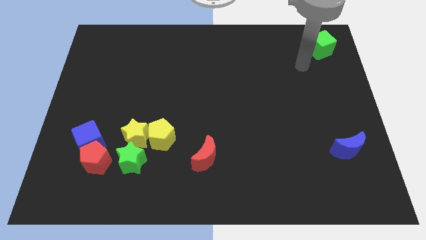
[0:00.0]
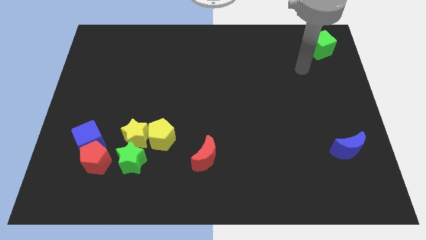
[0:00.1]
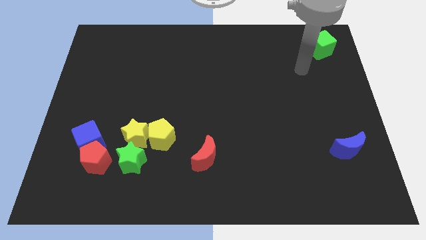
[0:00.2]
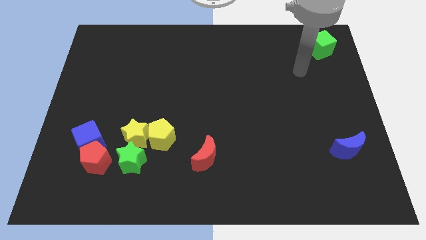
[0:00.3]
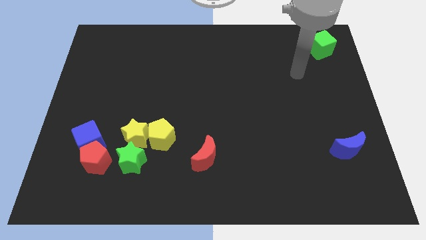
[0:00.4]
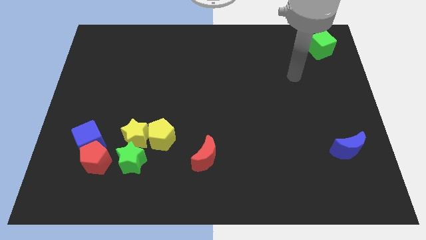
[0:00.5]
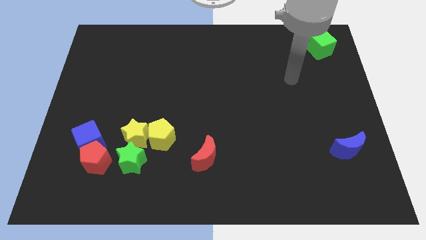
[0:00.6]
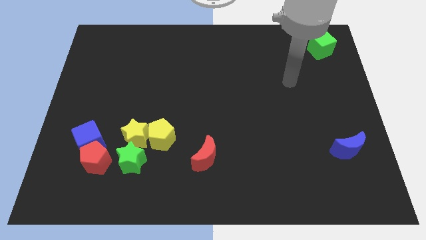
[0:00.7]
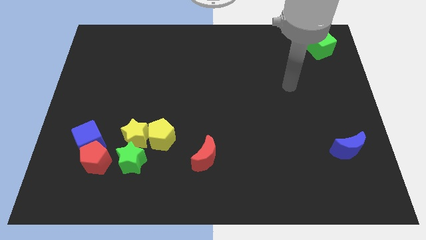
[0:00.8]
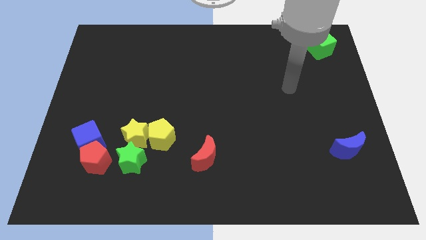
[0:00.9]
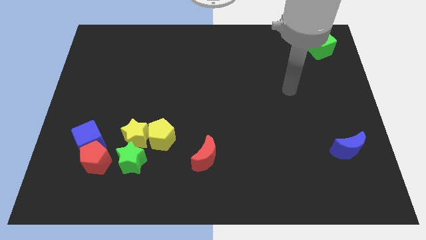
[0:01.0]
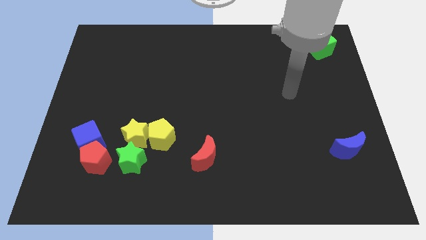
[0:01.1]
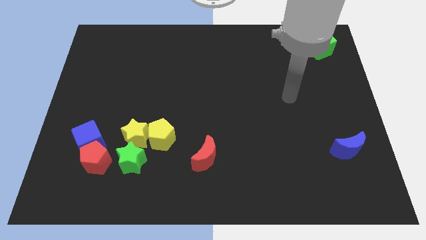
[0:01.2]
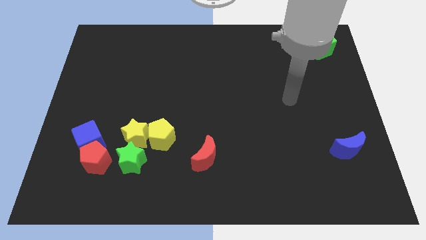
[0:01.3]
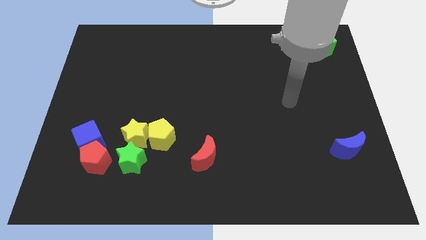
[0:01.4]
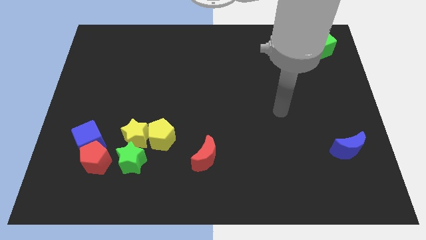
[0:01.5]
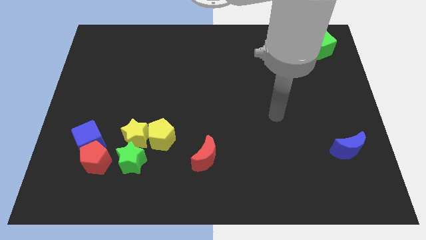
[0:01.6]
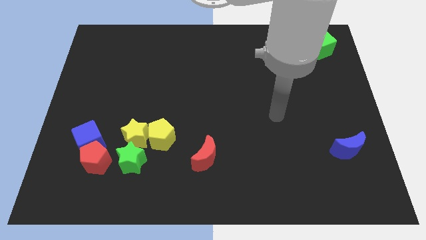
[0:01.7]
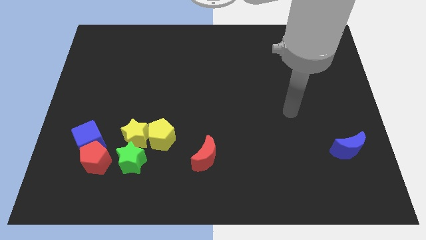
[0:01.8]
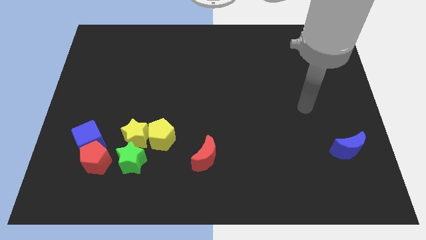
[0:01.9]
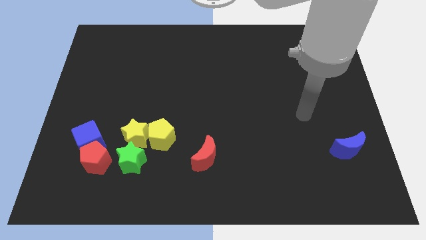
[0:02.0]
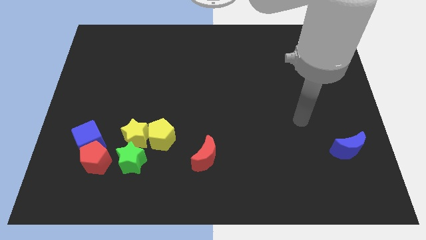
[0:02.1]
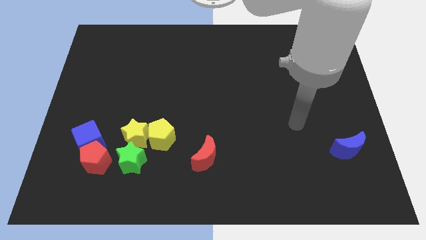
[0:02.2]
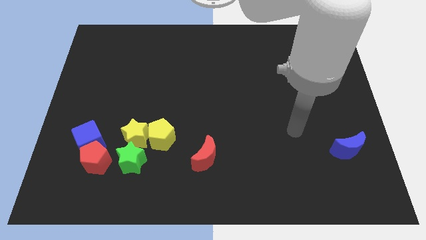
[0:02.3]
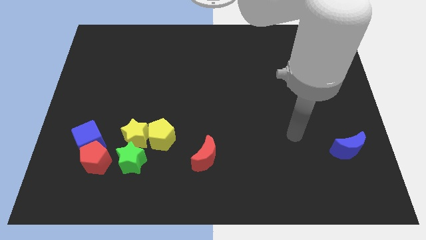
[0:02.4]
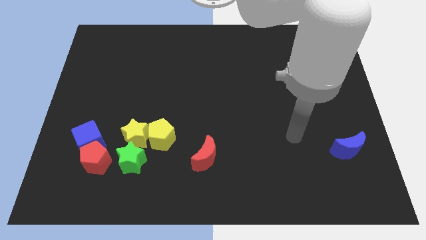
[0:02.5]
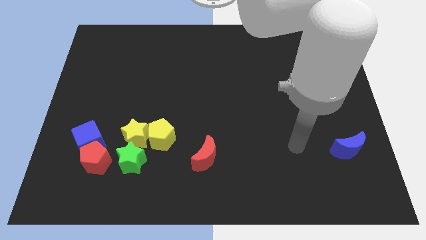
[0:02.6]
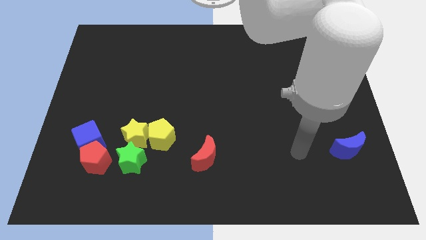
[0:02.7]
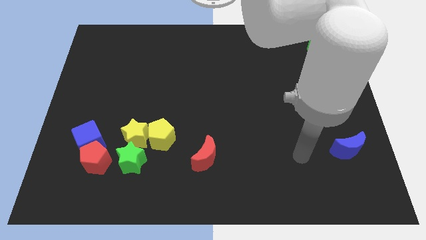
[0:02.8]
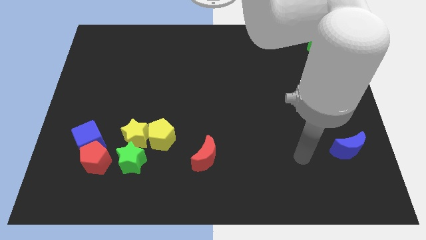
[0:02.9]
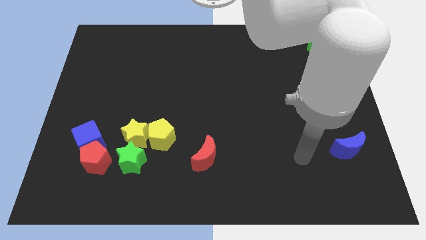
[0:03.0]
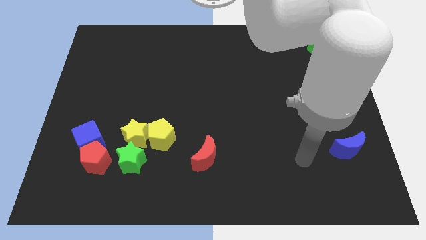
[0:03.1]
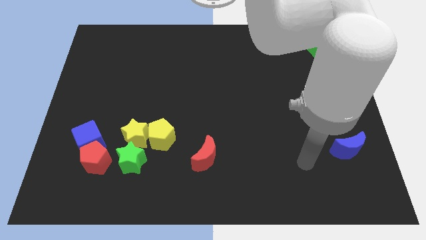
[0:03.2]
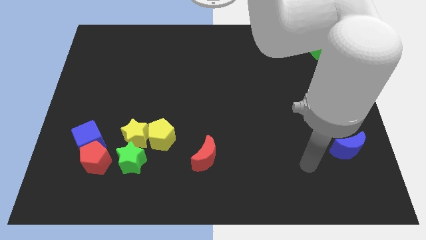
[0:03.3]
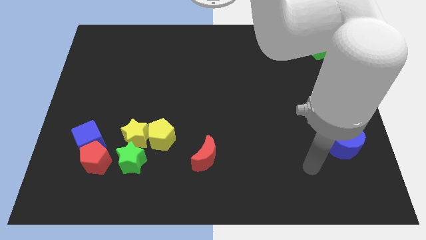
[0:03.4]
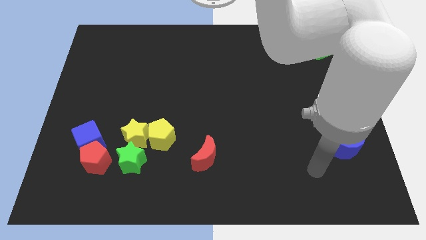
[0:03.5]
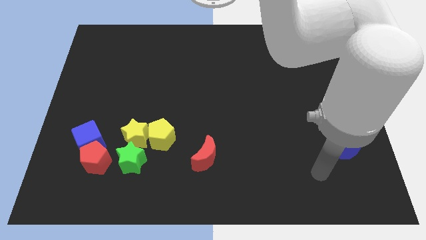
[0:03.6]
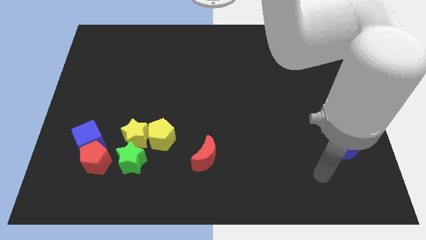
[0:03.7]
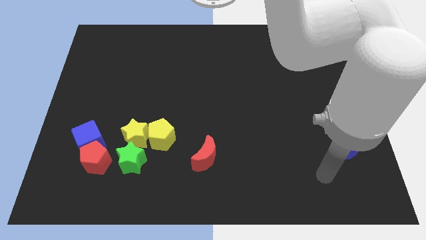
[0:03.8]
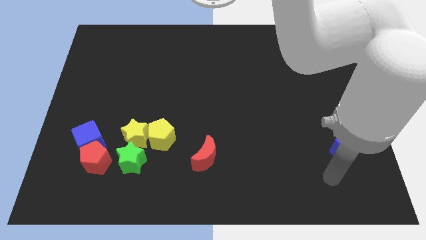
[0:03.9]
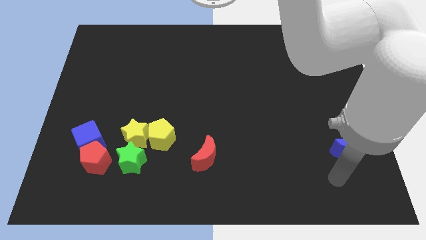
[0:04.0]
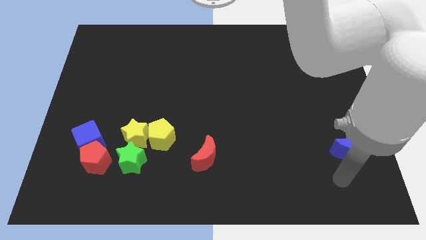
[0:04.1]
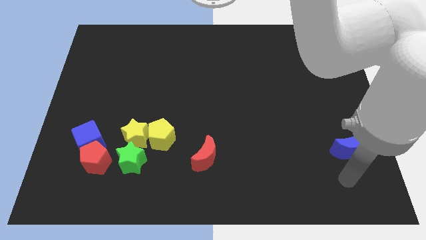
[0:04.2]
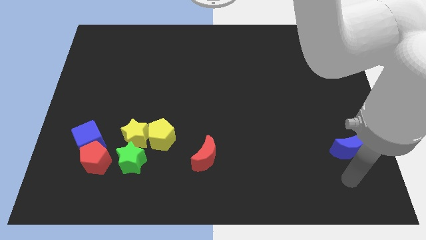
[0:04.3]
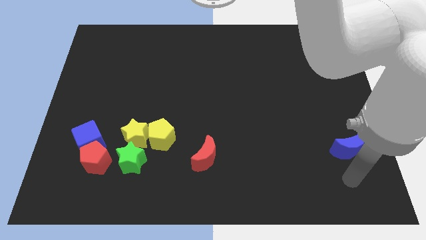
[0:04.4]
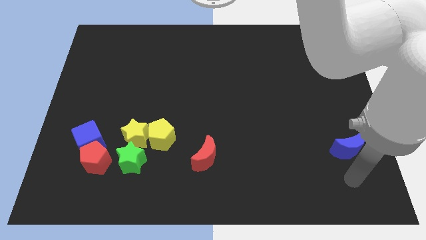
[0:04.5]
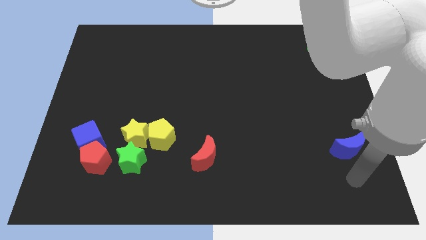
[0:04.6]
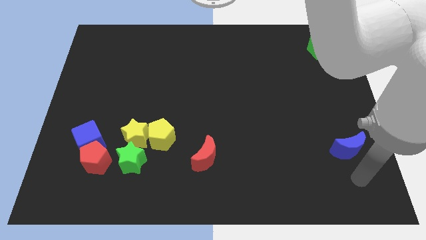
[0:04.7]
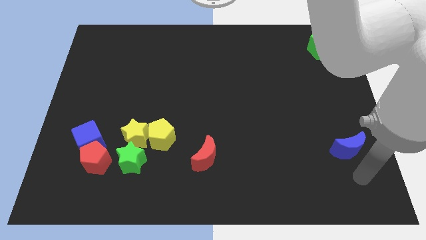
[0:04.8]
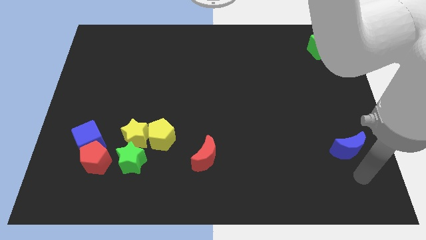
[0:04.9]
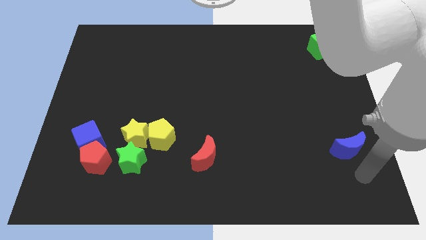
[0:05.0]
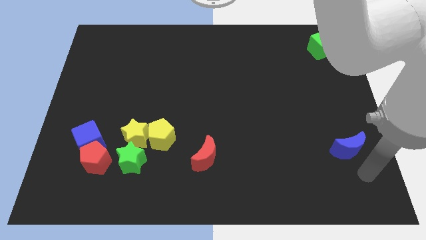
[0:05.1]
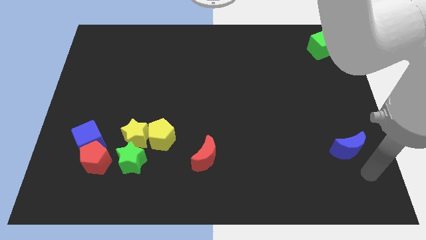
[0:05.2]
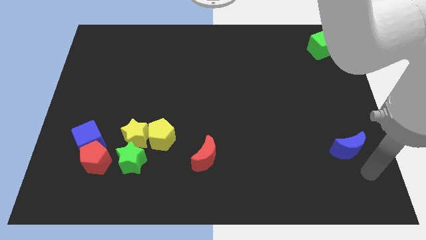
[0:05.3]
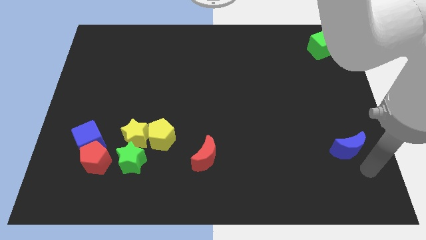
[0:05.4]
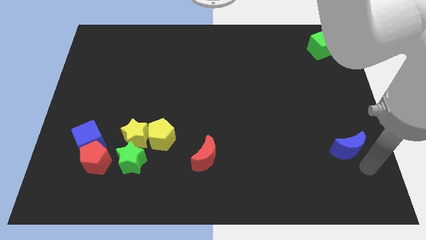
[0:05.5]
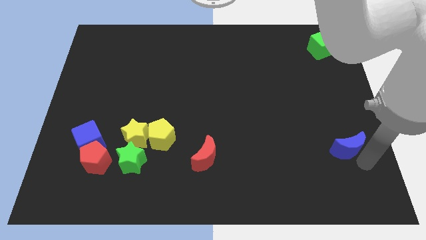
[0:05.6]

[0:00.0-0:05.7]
move your arm to the bottom of the blue moon

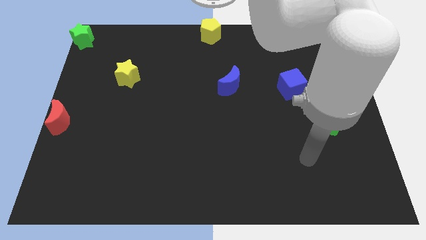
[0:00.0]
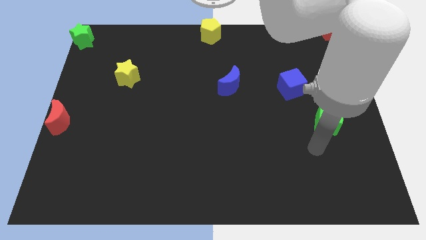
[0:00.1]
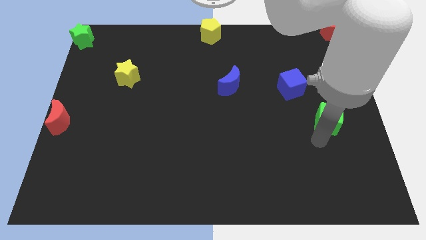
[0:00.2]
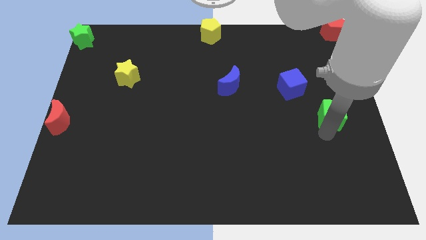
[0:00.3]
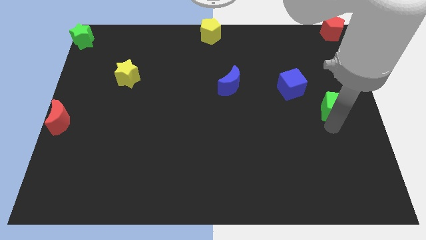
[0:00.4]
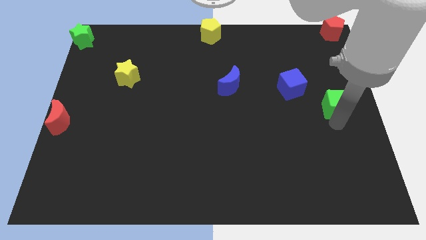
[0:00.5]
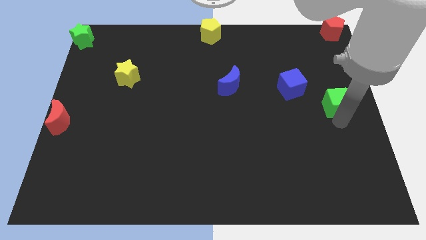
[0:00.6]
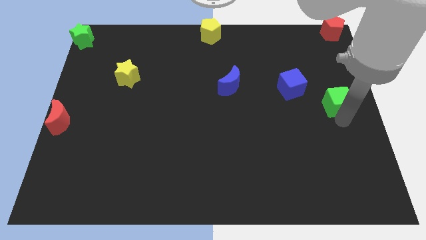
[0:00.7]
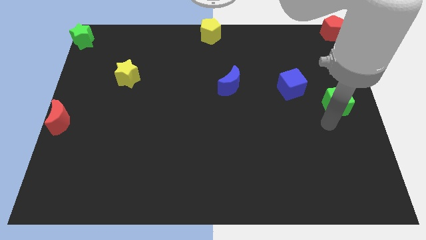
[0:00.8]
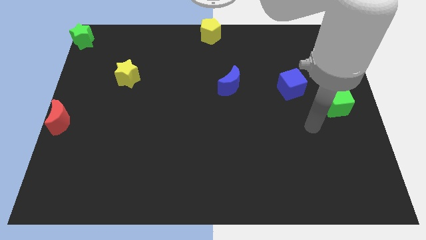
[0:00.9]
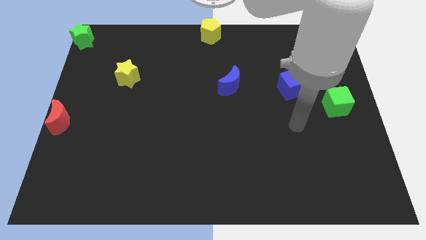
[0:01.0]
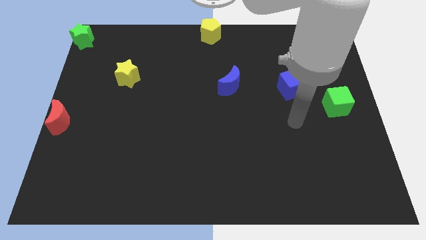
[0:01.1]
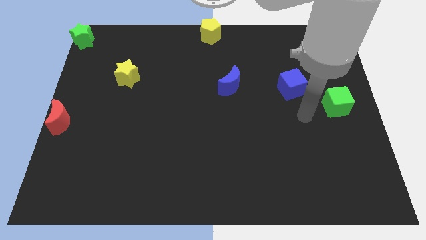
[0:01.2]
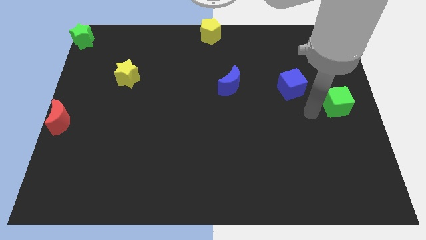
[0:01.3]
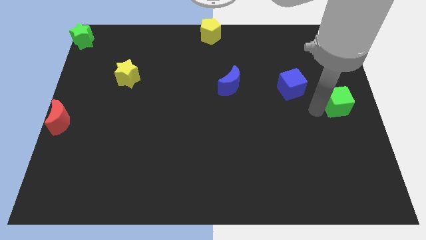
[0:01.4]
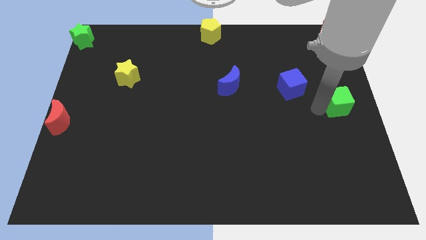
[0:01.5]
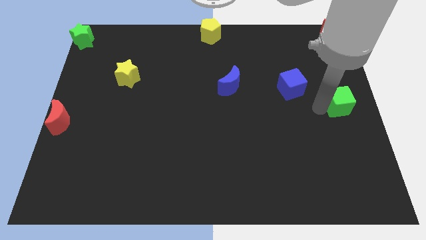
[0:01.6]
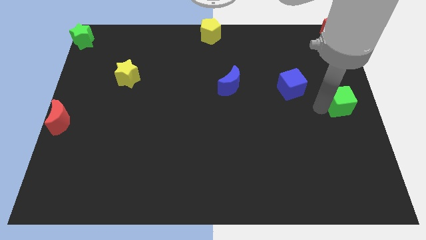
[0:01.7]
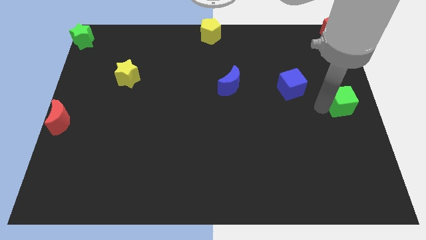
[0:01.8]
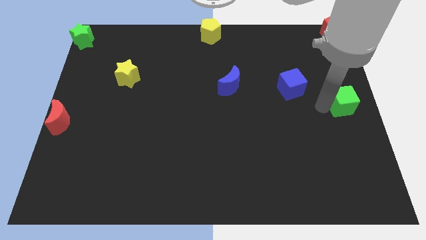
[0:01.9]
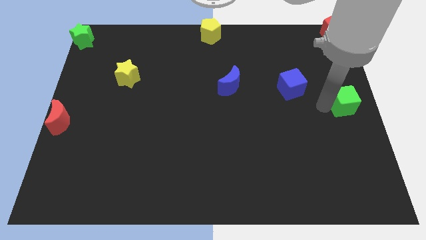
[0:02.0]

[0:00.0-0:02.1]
move green cube to the center right

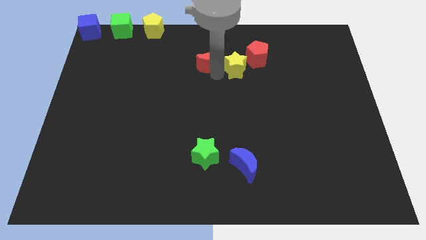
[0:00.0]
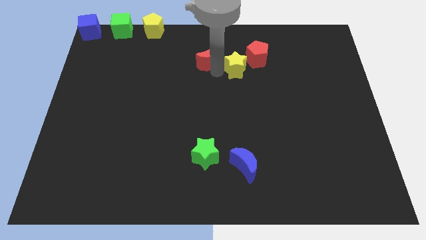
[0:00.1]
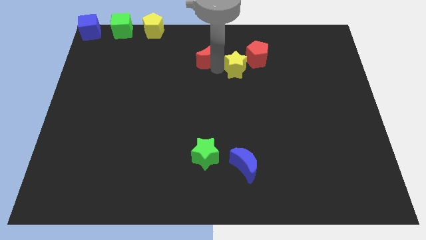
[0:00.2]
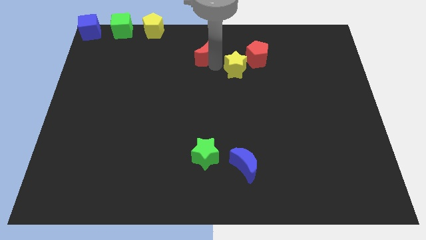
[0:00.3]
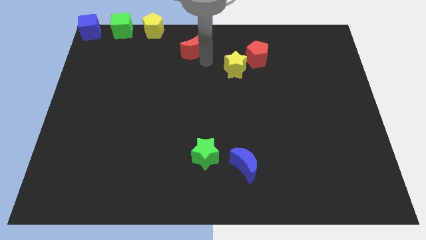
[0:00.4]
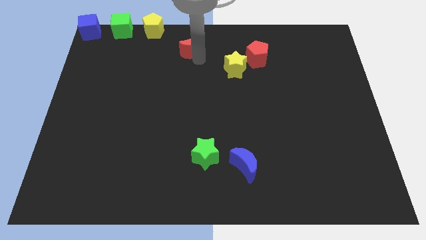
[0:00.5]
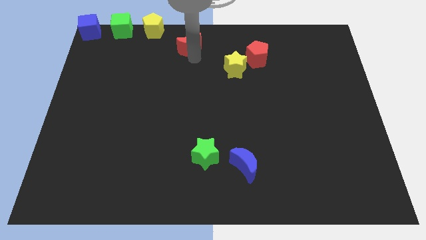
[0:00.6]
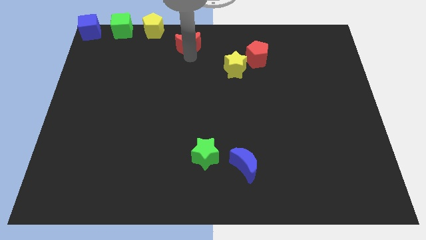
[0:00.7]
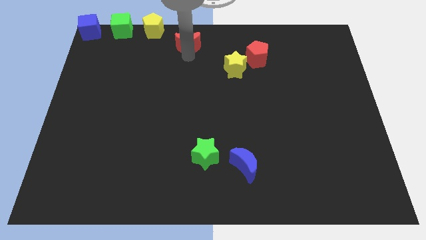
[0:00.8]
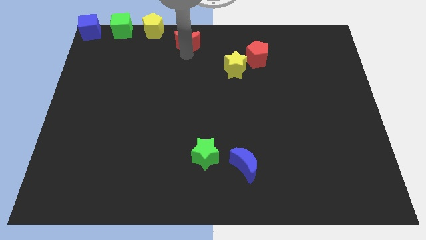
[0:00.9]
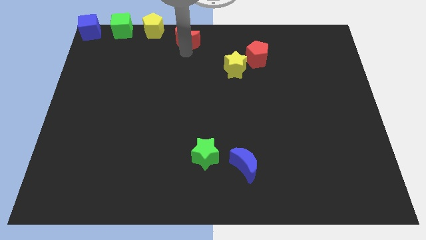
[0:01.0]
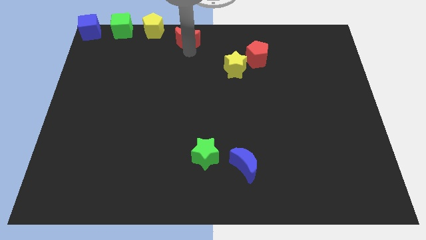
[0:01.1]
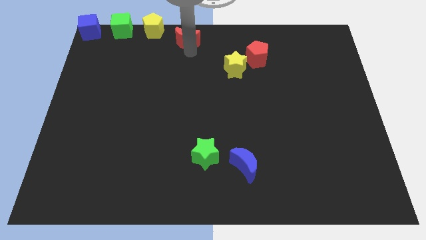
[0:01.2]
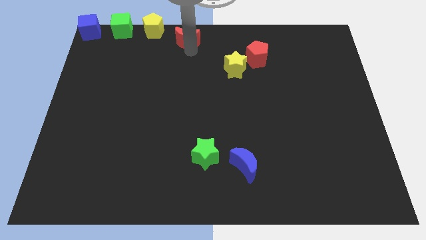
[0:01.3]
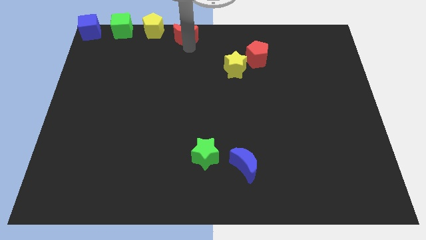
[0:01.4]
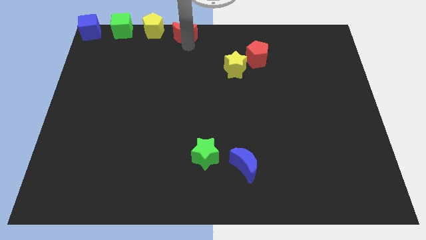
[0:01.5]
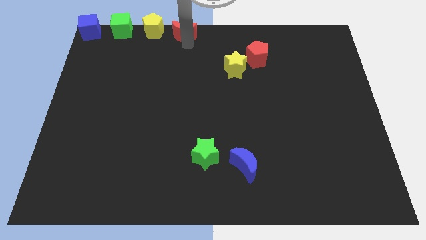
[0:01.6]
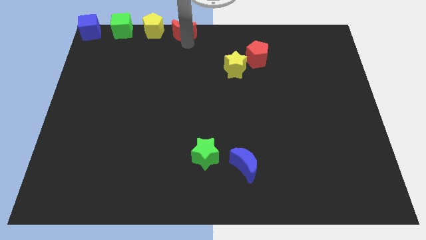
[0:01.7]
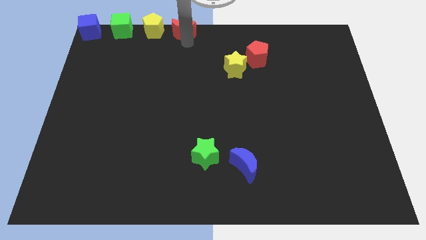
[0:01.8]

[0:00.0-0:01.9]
put the red moon right to the yellow pentagon
